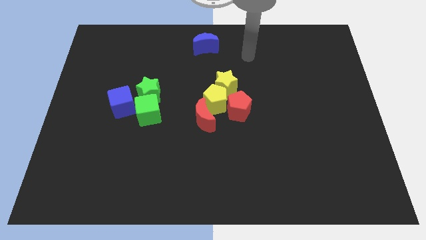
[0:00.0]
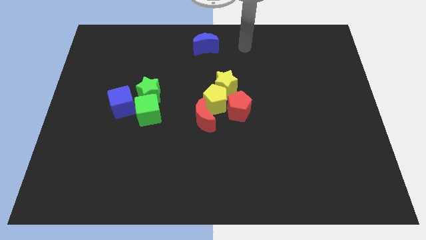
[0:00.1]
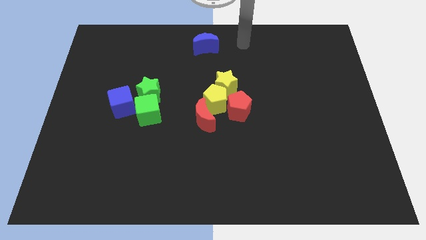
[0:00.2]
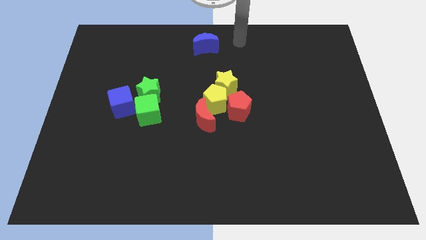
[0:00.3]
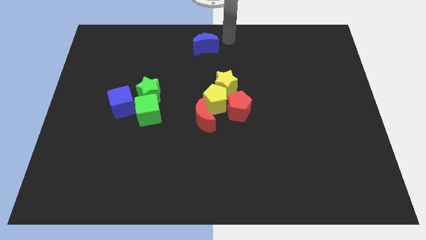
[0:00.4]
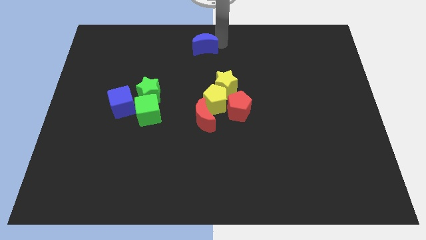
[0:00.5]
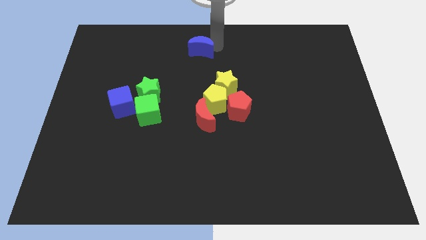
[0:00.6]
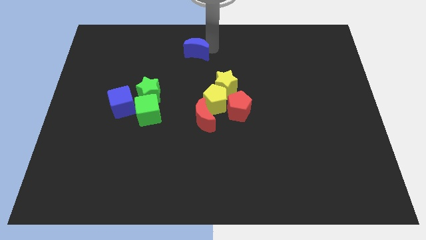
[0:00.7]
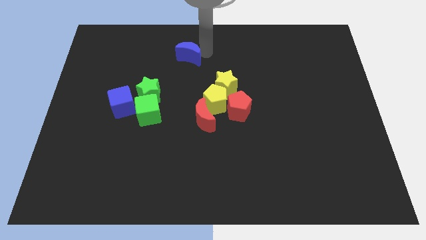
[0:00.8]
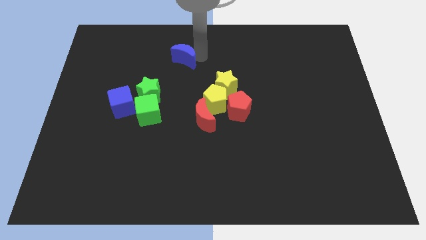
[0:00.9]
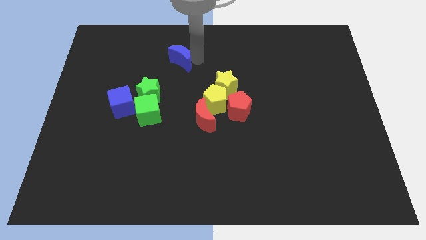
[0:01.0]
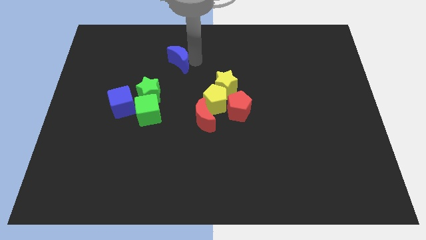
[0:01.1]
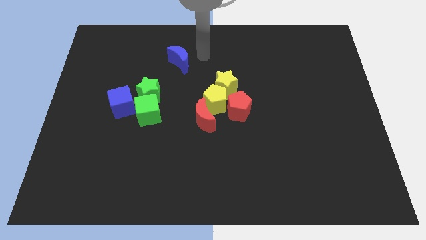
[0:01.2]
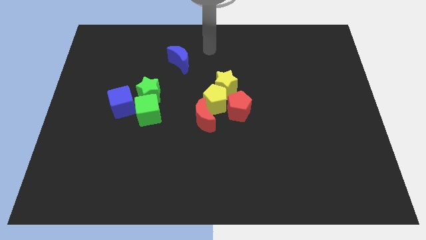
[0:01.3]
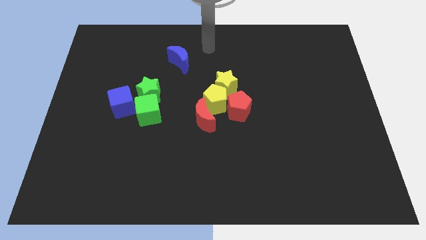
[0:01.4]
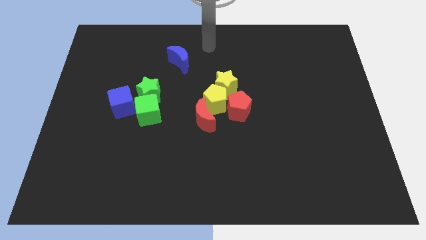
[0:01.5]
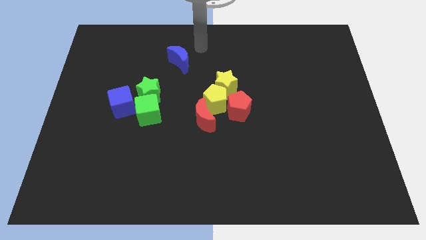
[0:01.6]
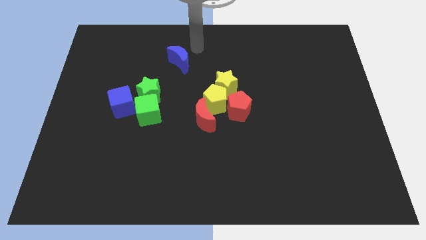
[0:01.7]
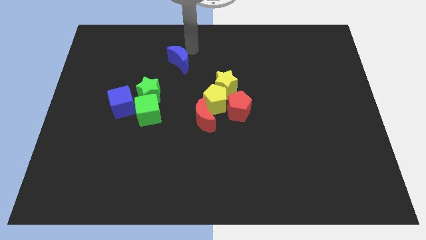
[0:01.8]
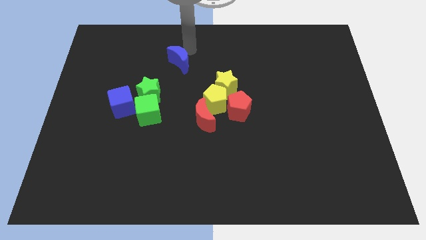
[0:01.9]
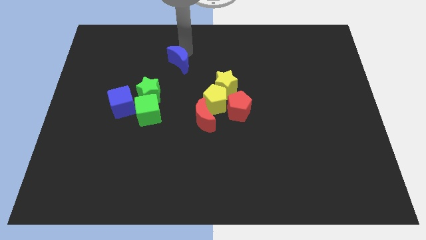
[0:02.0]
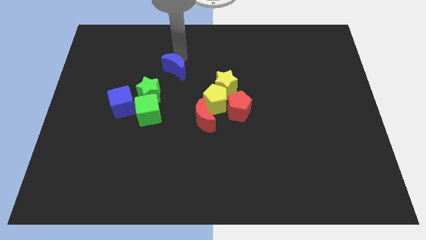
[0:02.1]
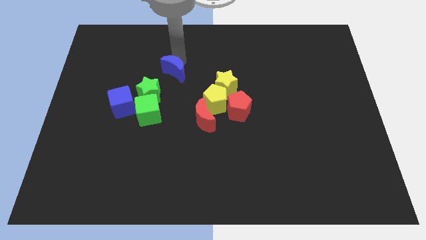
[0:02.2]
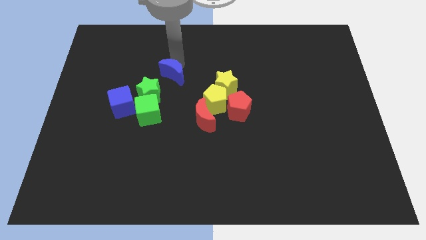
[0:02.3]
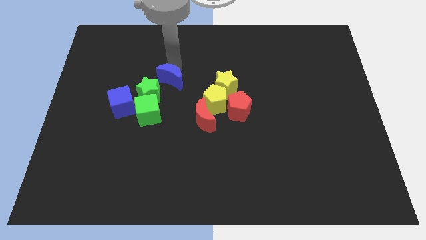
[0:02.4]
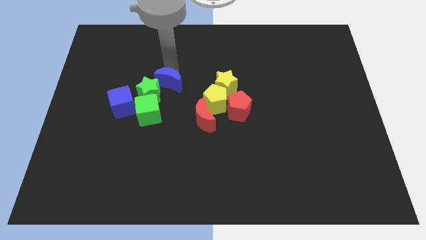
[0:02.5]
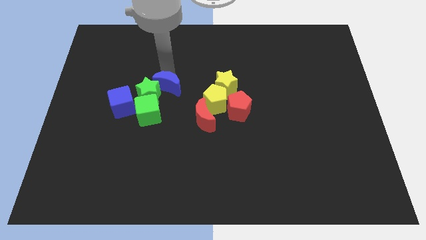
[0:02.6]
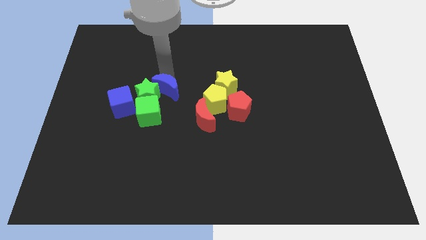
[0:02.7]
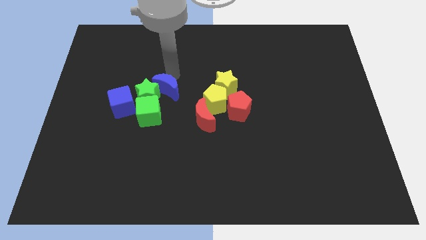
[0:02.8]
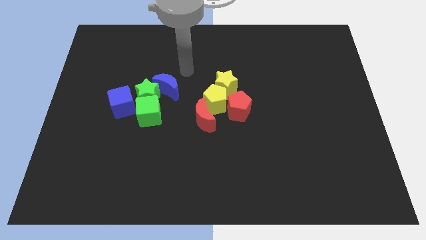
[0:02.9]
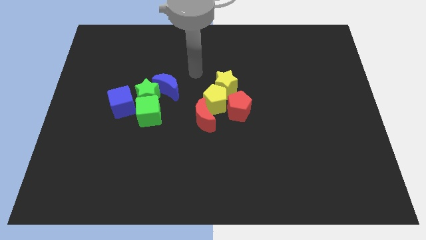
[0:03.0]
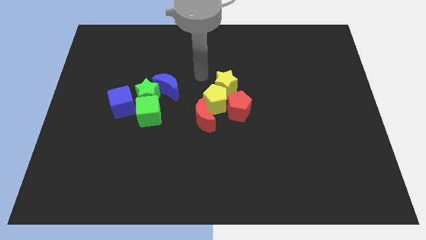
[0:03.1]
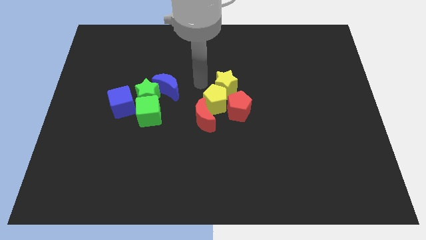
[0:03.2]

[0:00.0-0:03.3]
slide the blue moon into the green star

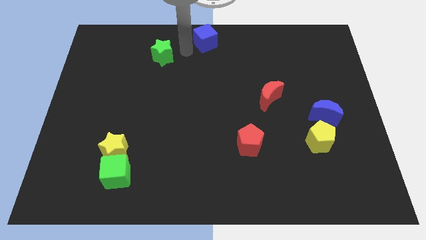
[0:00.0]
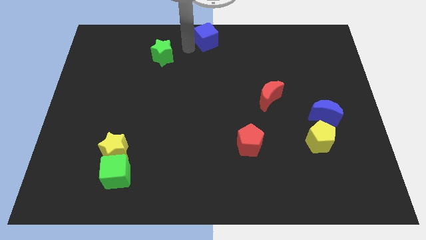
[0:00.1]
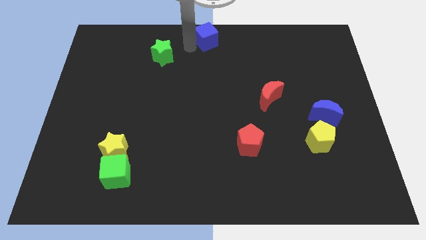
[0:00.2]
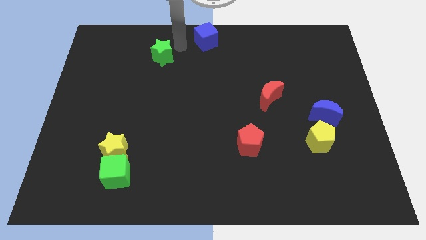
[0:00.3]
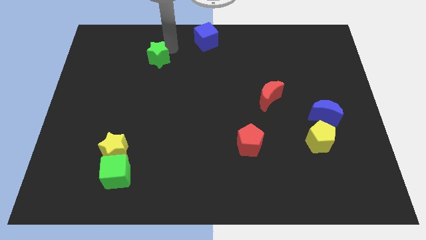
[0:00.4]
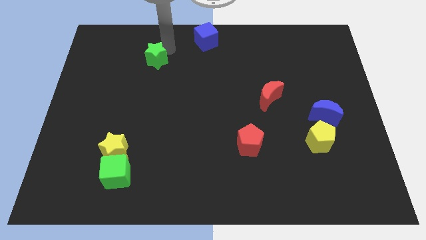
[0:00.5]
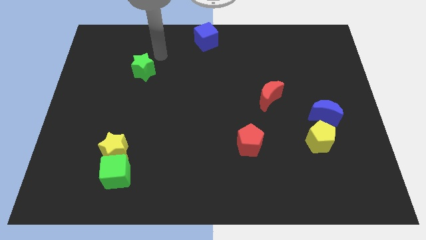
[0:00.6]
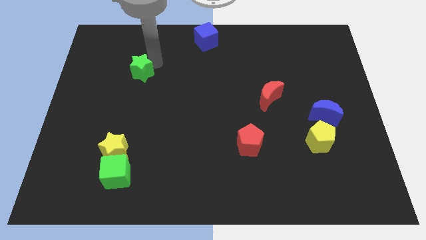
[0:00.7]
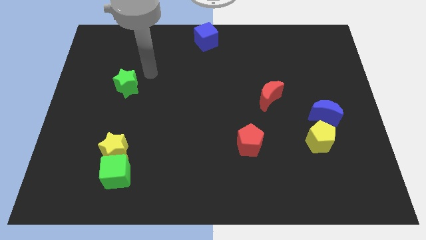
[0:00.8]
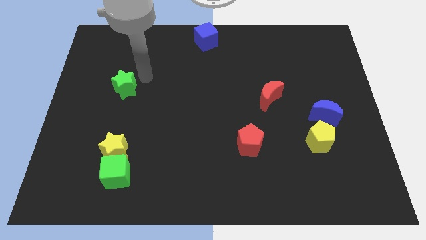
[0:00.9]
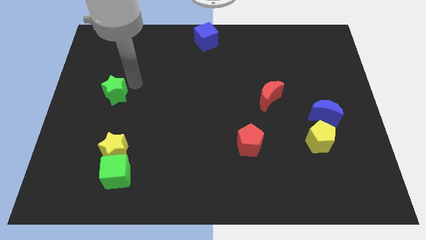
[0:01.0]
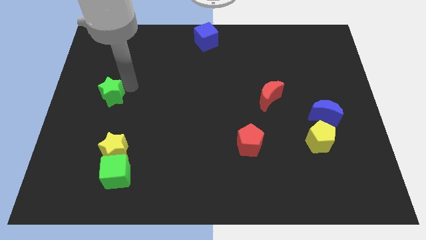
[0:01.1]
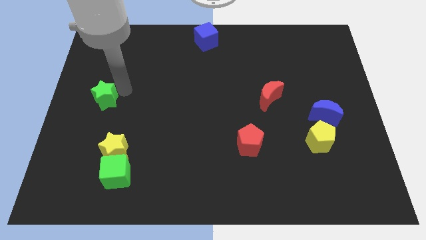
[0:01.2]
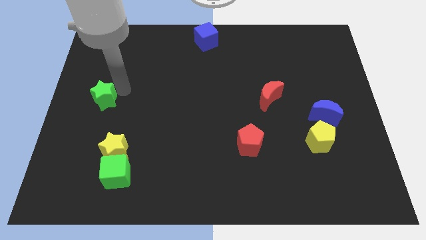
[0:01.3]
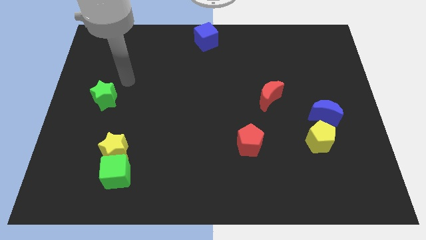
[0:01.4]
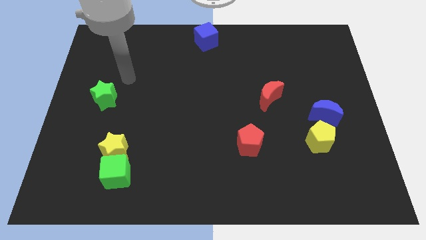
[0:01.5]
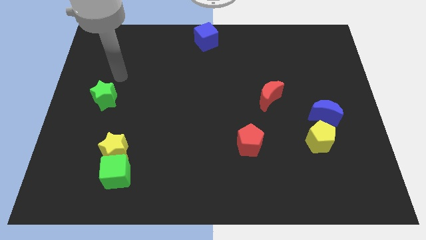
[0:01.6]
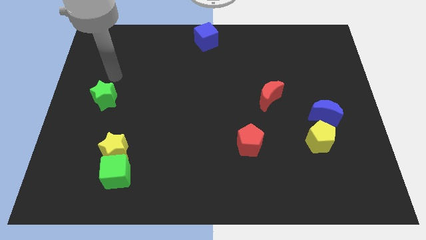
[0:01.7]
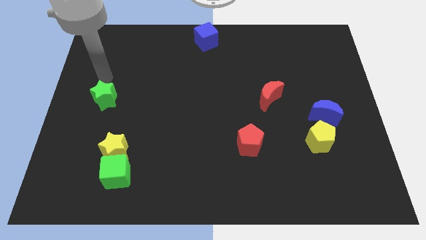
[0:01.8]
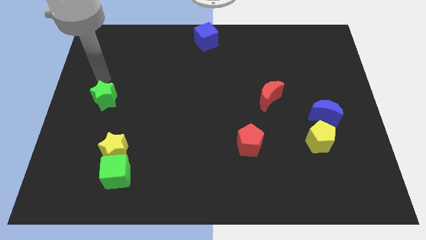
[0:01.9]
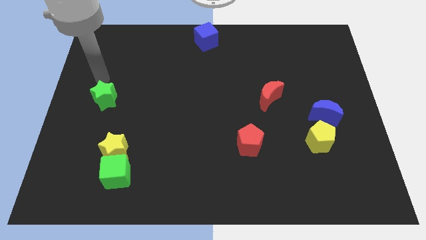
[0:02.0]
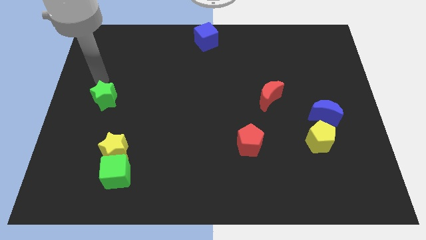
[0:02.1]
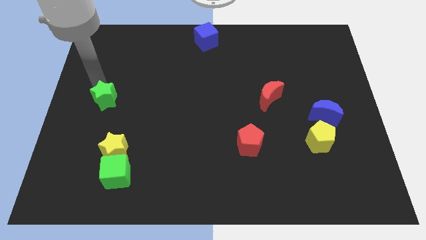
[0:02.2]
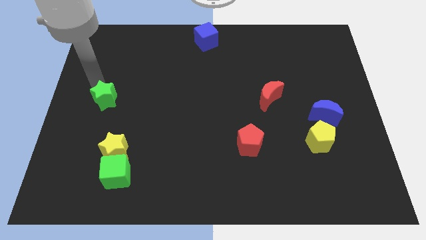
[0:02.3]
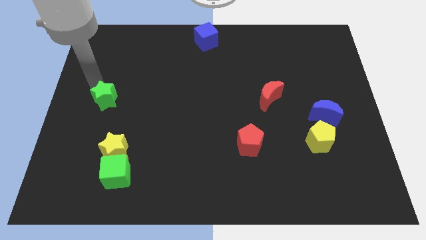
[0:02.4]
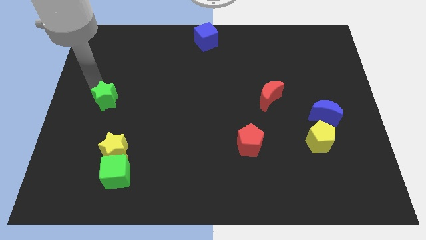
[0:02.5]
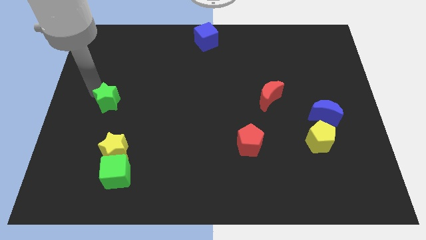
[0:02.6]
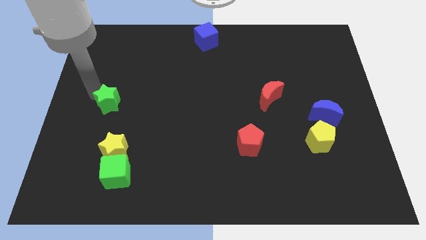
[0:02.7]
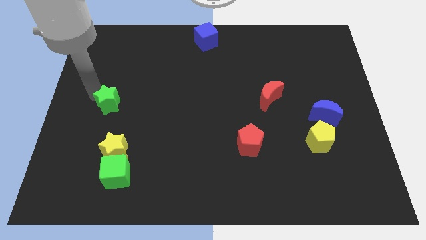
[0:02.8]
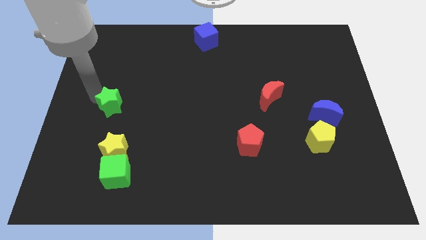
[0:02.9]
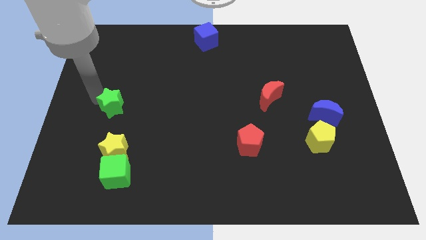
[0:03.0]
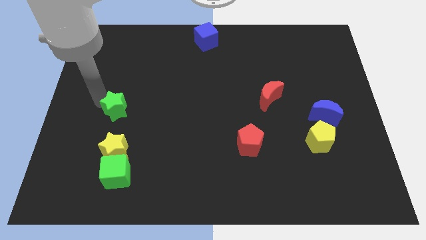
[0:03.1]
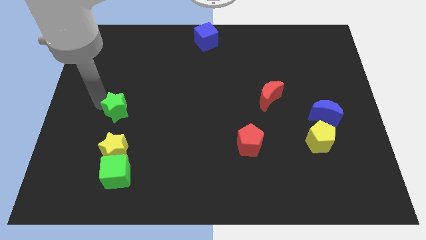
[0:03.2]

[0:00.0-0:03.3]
place the green star above the yellow star

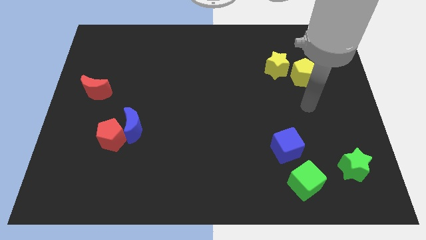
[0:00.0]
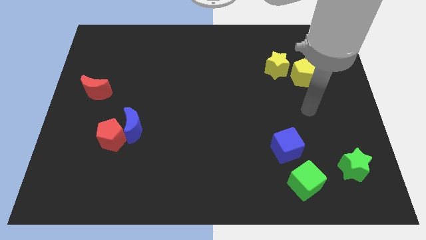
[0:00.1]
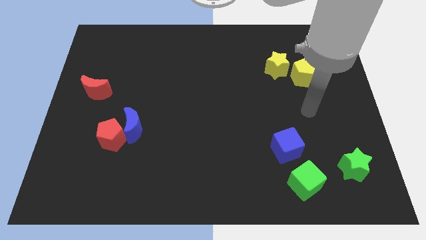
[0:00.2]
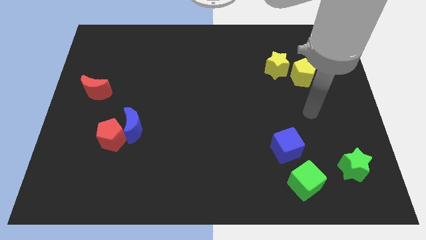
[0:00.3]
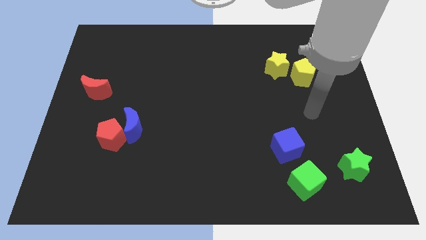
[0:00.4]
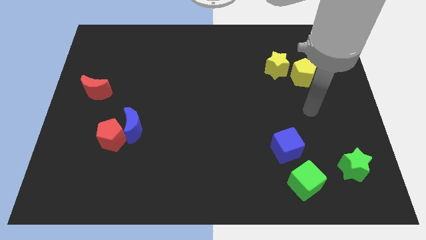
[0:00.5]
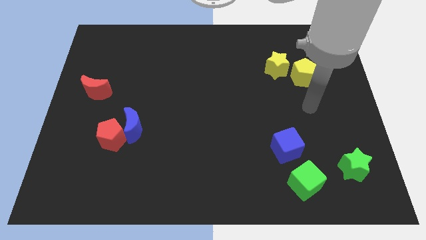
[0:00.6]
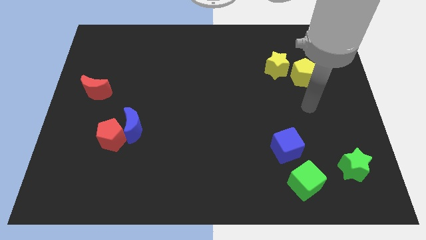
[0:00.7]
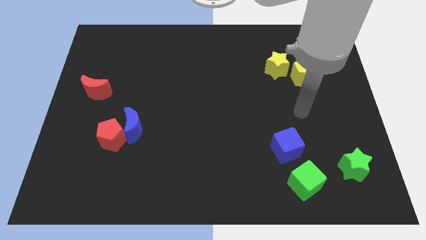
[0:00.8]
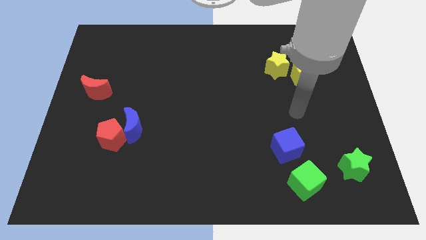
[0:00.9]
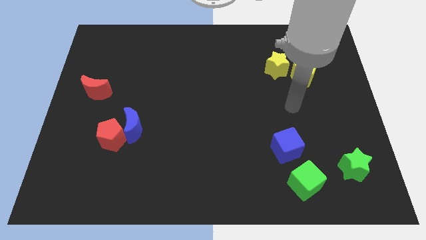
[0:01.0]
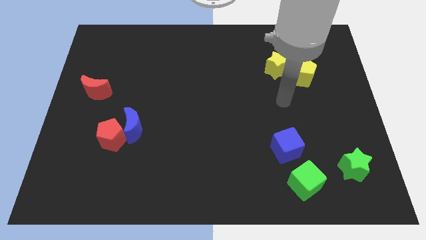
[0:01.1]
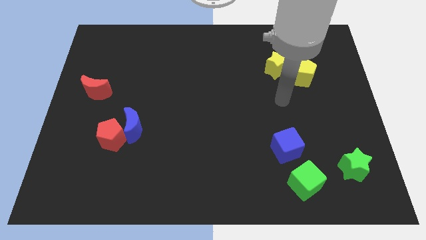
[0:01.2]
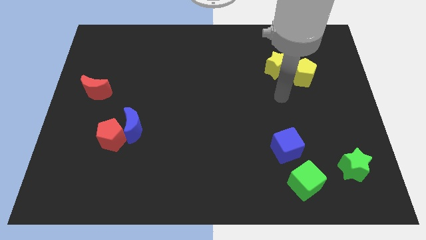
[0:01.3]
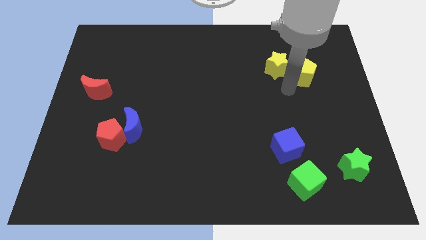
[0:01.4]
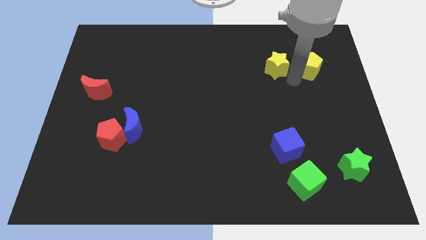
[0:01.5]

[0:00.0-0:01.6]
push yellow pentagon slightly up

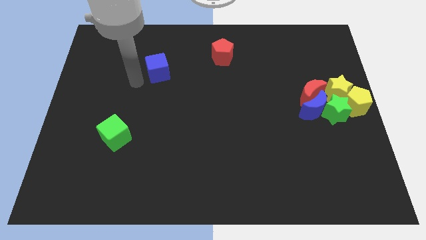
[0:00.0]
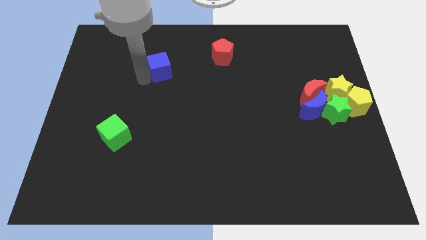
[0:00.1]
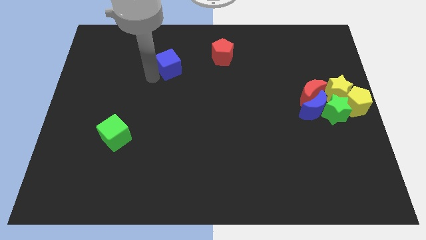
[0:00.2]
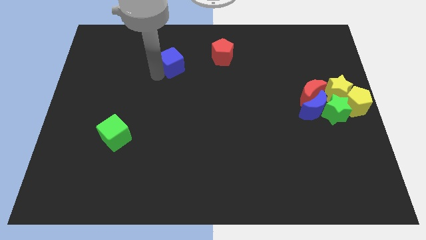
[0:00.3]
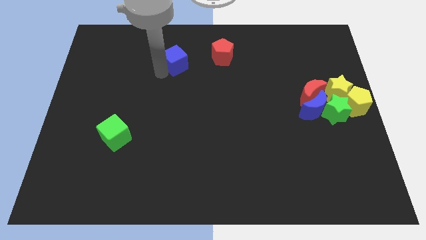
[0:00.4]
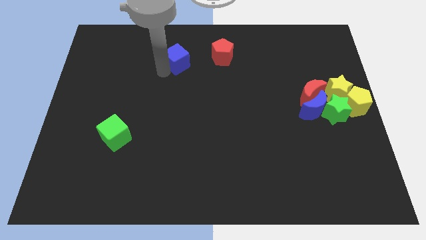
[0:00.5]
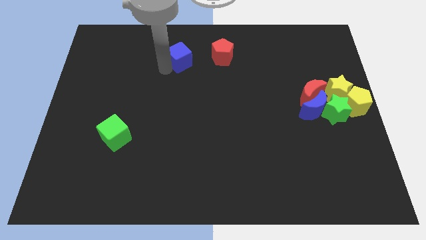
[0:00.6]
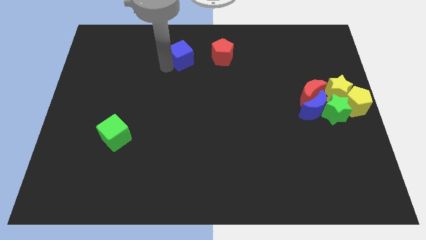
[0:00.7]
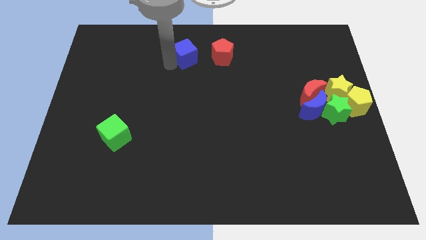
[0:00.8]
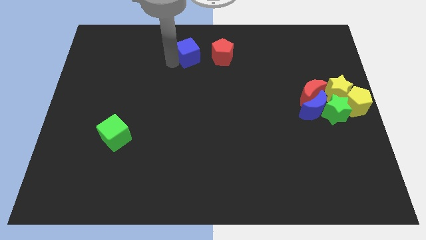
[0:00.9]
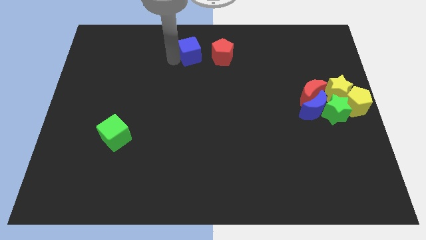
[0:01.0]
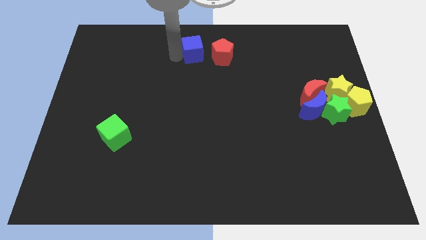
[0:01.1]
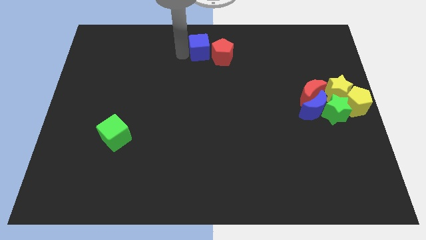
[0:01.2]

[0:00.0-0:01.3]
place the blue cube to the left of the red pentagon
